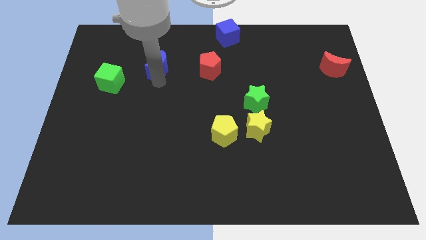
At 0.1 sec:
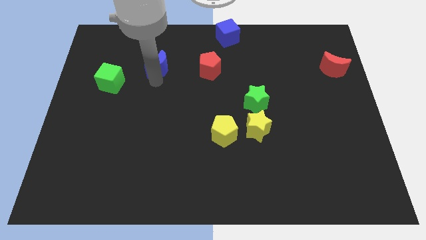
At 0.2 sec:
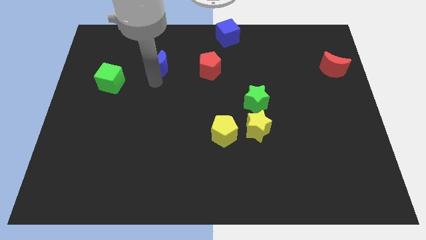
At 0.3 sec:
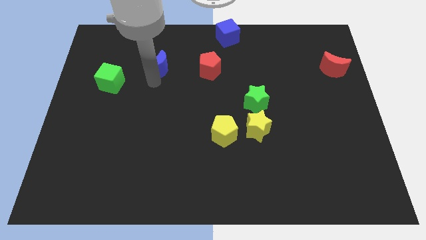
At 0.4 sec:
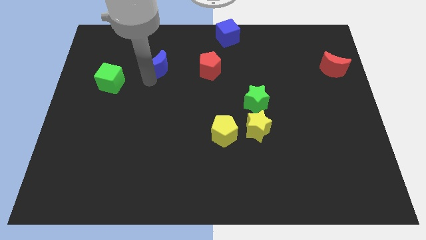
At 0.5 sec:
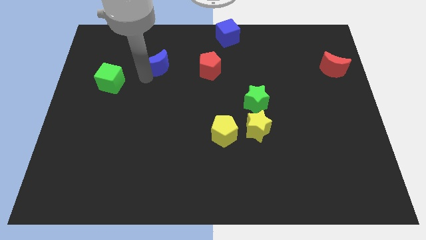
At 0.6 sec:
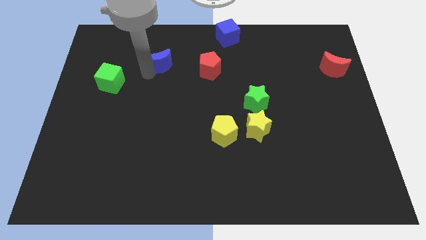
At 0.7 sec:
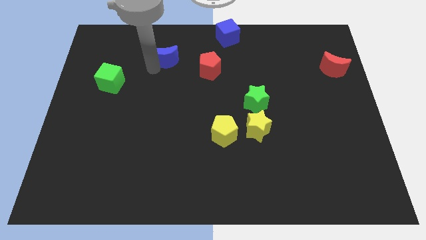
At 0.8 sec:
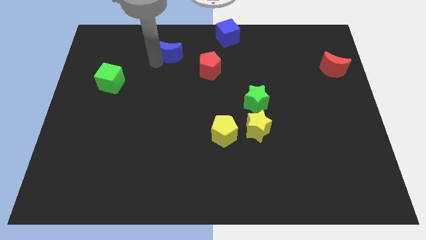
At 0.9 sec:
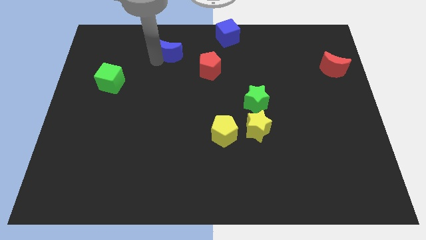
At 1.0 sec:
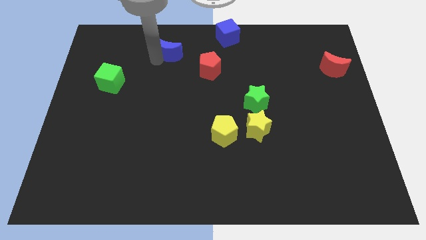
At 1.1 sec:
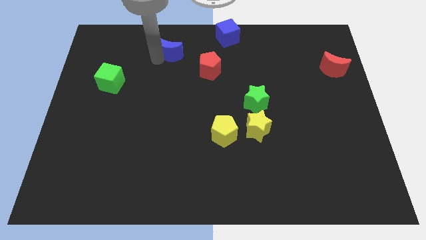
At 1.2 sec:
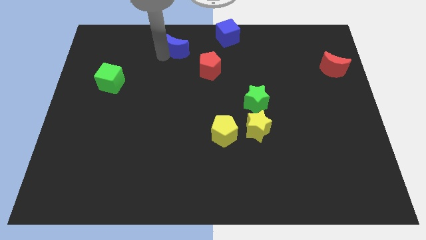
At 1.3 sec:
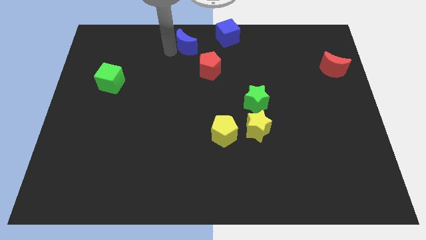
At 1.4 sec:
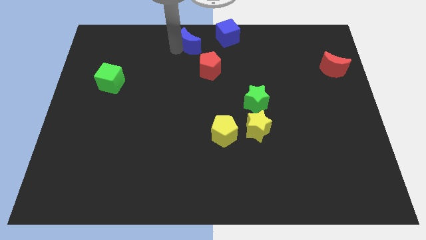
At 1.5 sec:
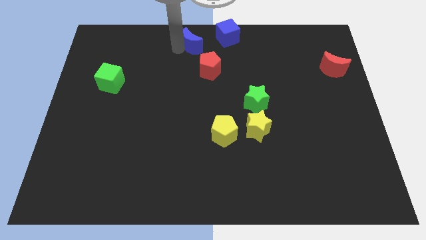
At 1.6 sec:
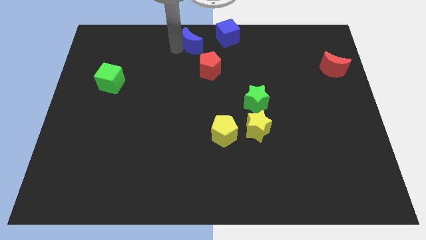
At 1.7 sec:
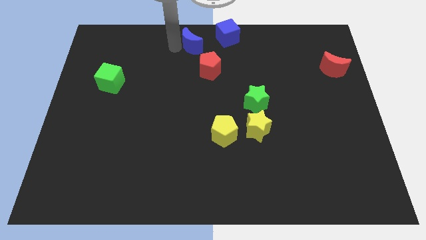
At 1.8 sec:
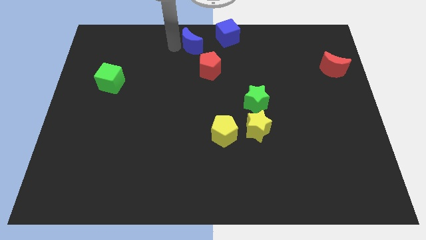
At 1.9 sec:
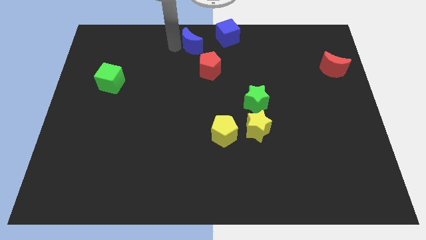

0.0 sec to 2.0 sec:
push the blue moon towards the blue cube

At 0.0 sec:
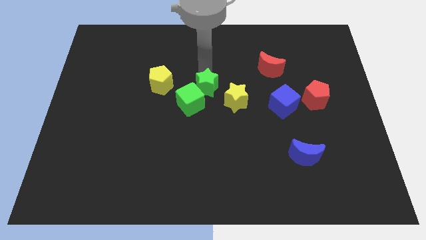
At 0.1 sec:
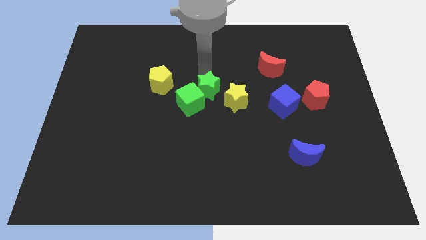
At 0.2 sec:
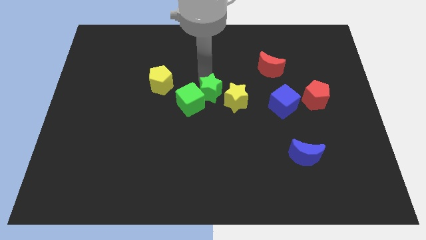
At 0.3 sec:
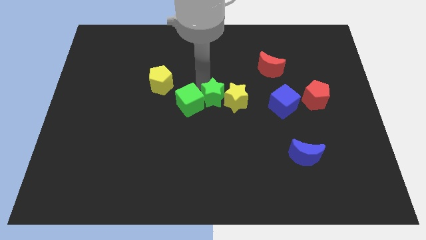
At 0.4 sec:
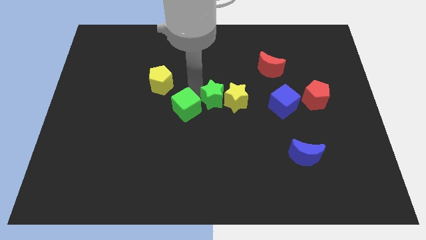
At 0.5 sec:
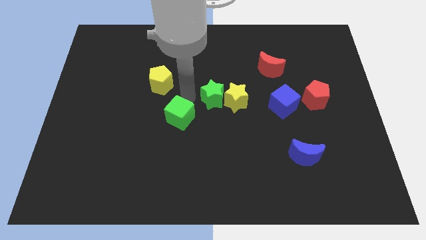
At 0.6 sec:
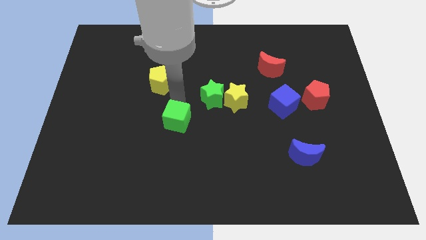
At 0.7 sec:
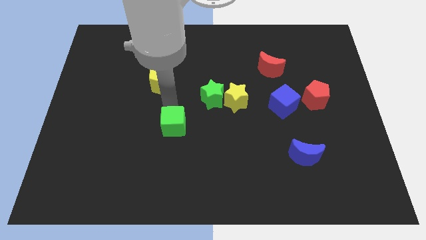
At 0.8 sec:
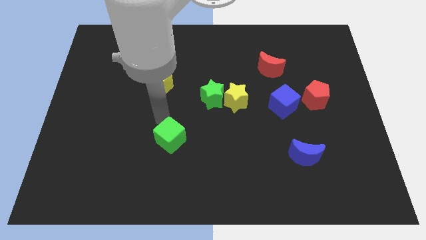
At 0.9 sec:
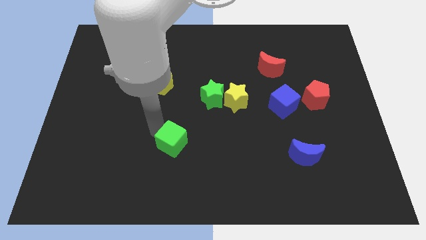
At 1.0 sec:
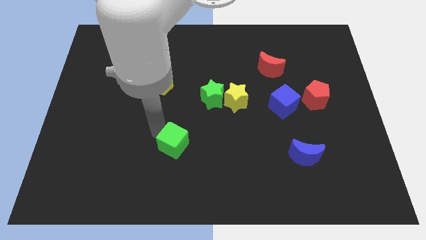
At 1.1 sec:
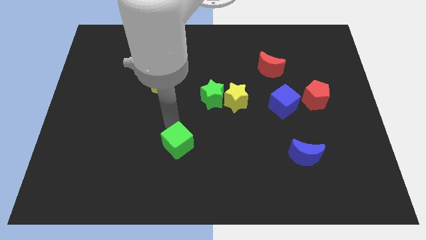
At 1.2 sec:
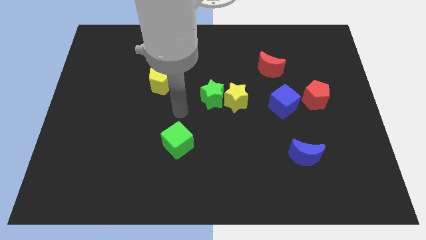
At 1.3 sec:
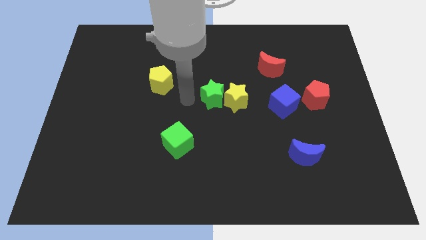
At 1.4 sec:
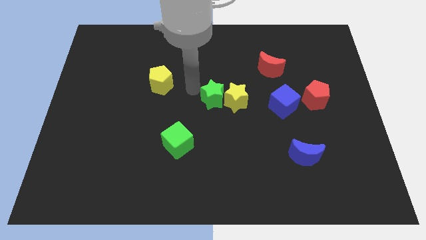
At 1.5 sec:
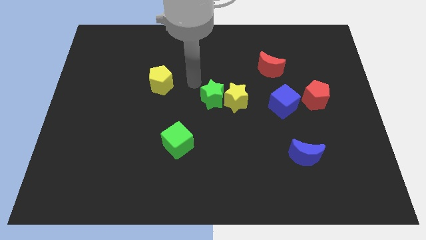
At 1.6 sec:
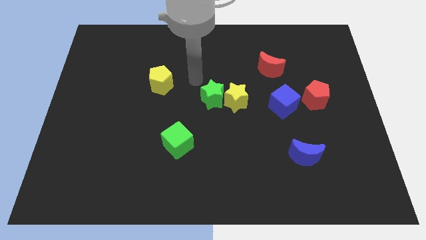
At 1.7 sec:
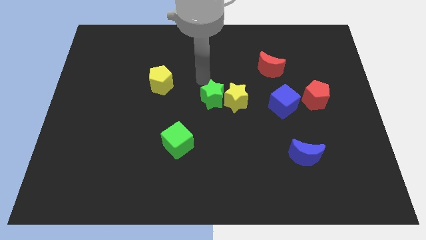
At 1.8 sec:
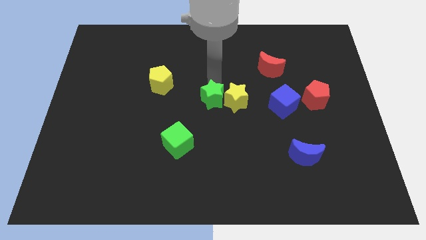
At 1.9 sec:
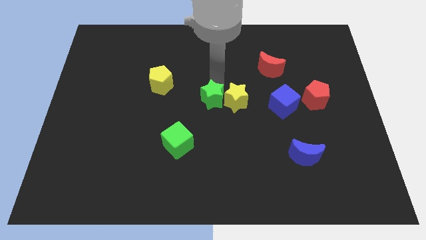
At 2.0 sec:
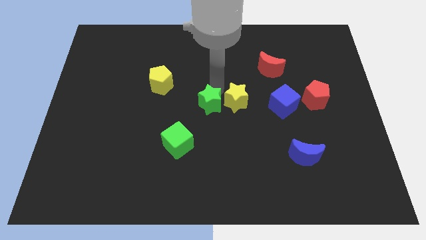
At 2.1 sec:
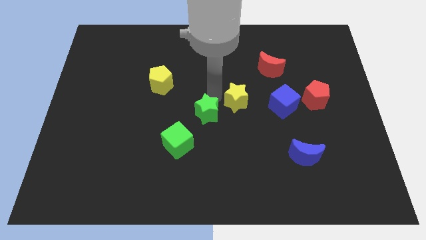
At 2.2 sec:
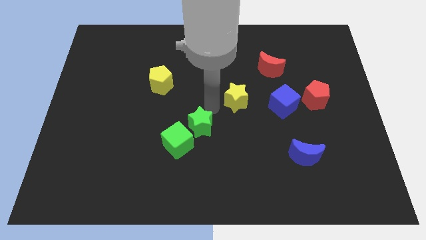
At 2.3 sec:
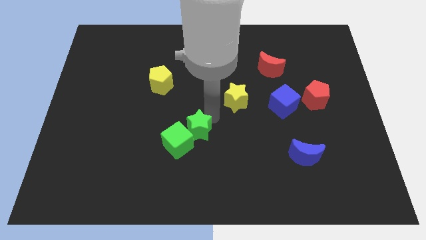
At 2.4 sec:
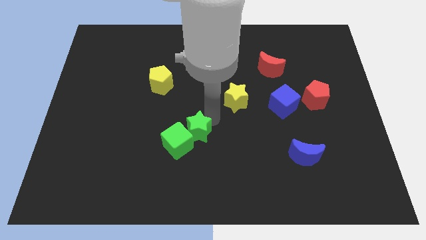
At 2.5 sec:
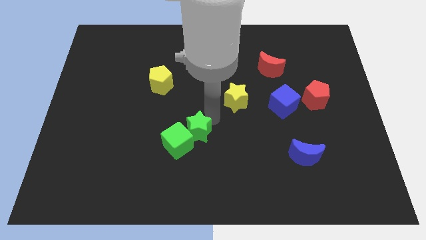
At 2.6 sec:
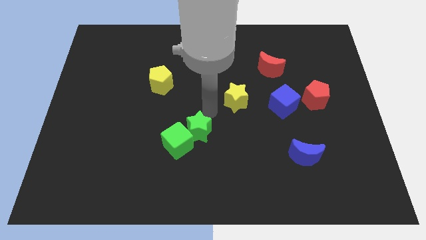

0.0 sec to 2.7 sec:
drag the green star slightly downwards

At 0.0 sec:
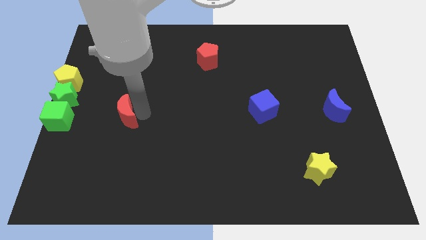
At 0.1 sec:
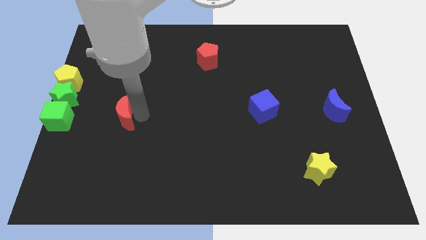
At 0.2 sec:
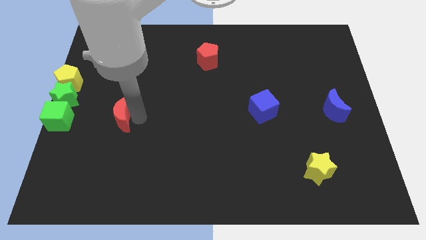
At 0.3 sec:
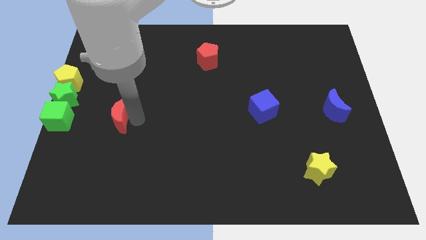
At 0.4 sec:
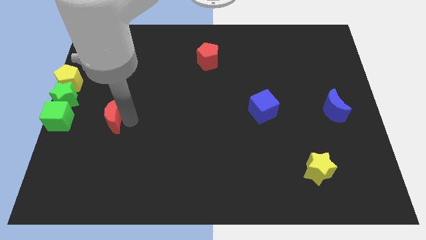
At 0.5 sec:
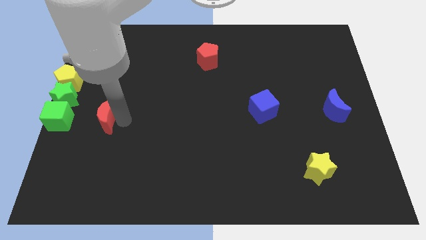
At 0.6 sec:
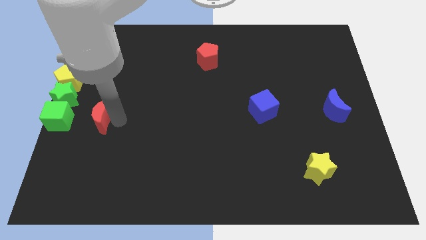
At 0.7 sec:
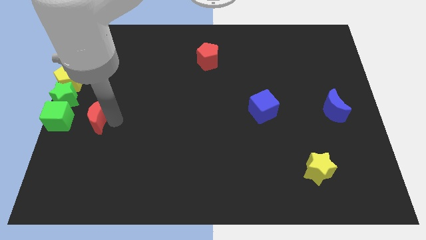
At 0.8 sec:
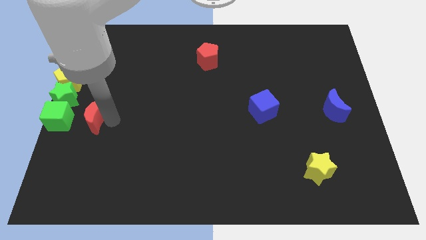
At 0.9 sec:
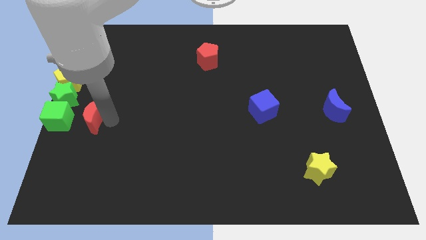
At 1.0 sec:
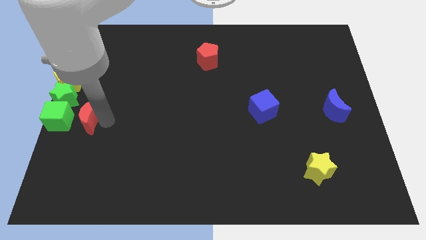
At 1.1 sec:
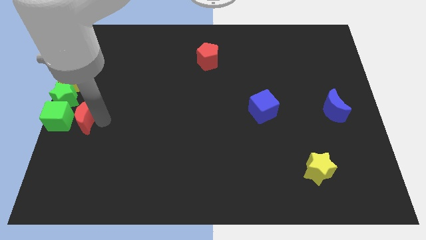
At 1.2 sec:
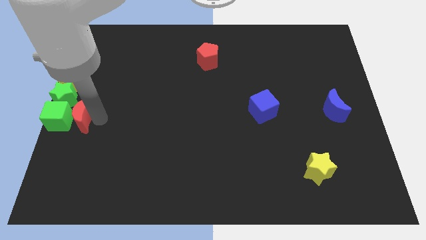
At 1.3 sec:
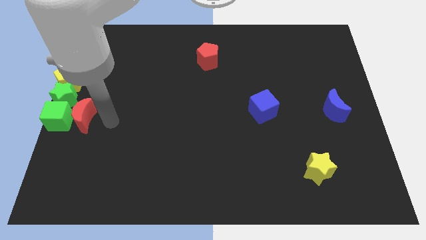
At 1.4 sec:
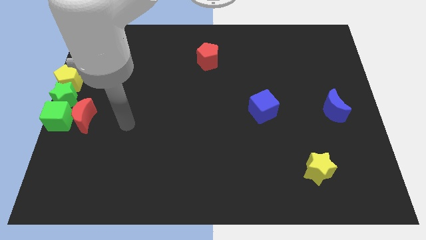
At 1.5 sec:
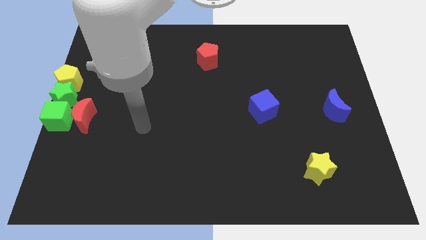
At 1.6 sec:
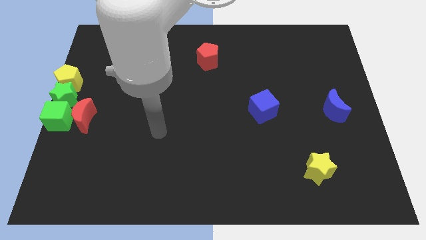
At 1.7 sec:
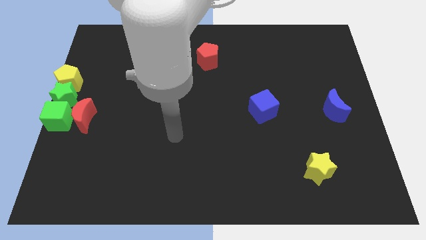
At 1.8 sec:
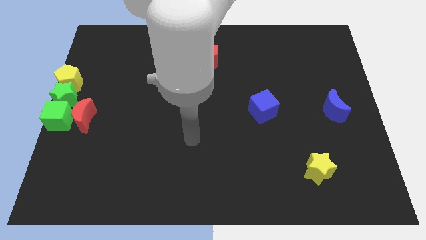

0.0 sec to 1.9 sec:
place red crescent to the right of green cube and green star

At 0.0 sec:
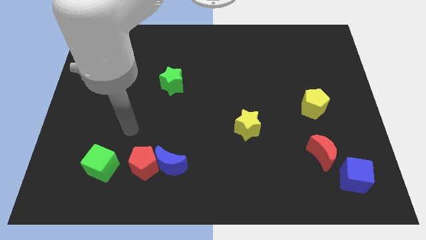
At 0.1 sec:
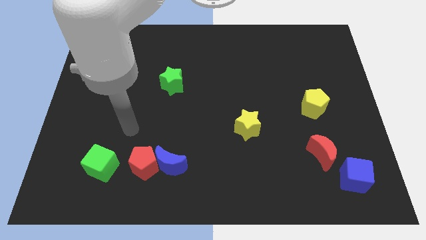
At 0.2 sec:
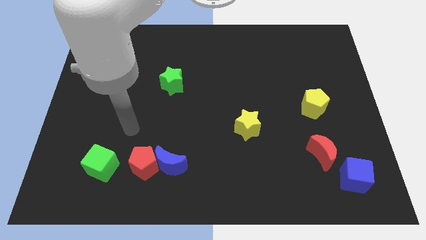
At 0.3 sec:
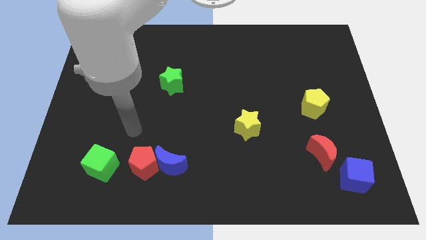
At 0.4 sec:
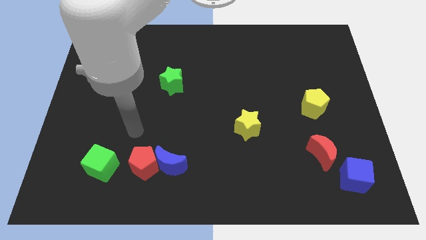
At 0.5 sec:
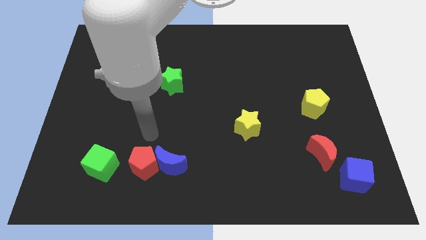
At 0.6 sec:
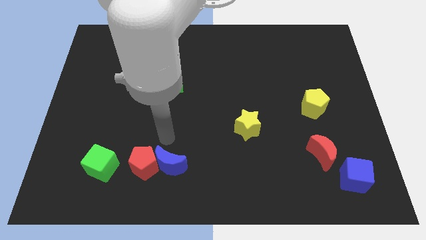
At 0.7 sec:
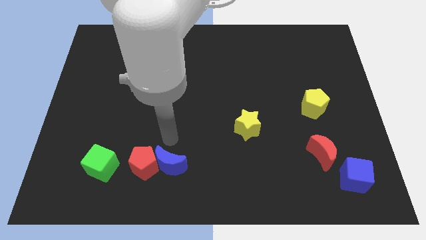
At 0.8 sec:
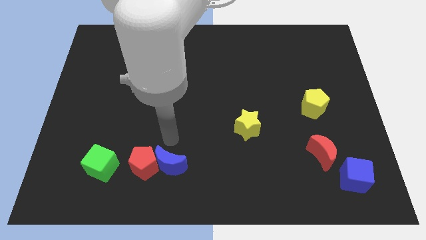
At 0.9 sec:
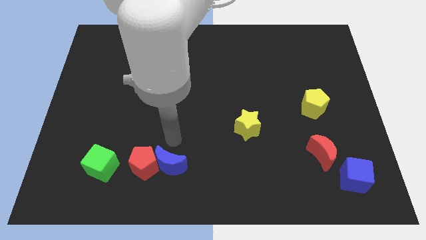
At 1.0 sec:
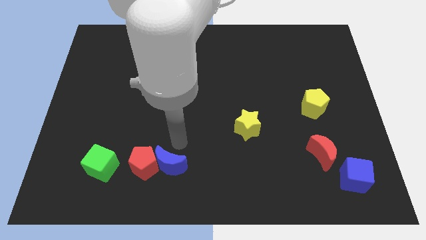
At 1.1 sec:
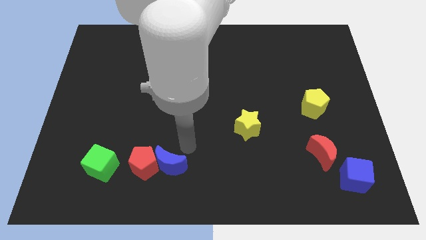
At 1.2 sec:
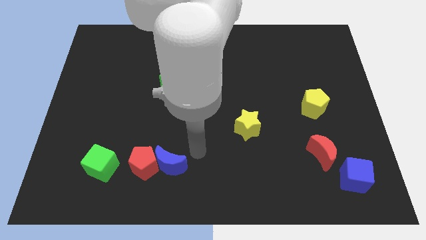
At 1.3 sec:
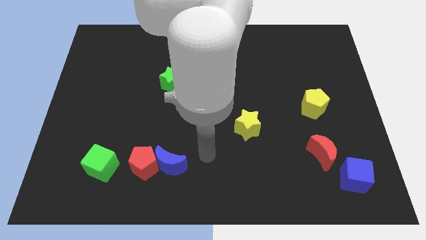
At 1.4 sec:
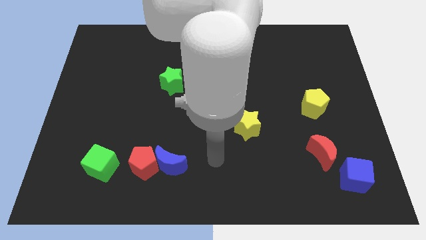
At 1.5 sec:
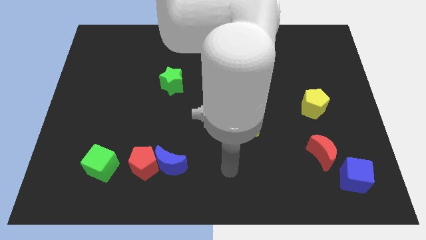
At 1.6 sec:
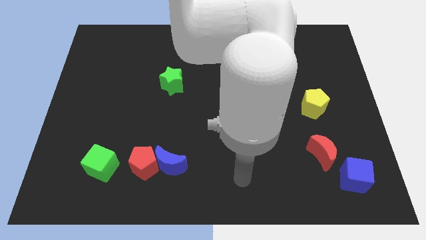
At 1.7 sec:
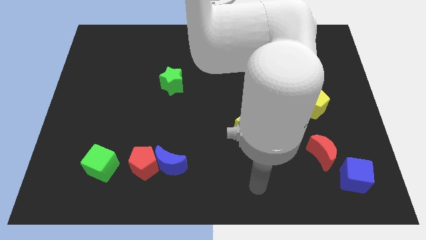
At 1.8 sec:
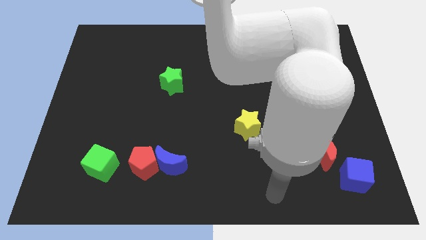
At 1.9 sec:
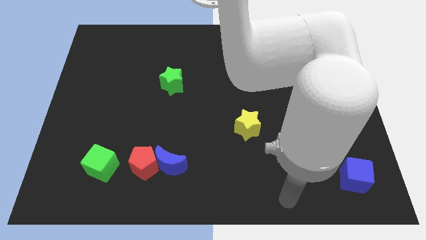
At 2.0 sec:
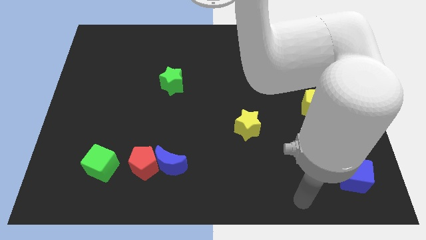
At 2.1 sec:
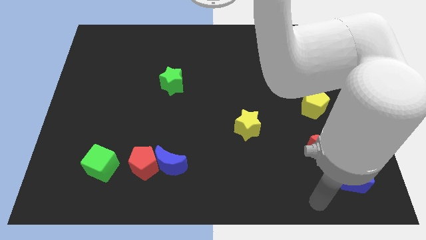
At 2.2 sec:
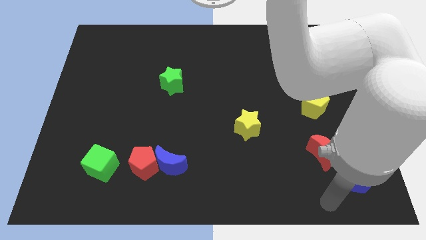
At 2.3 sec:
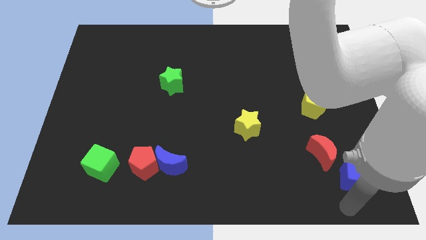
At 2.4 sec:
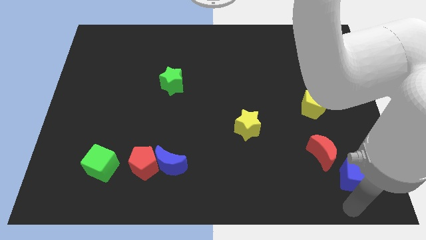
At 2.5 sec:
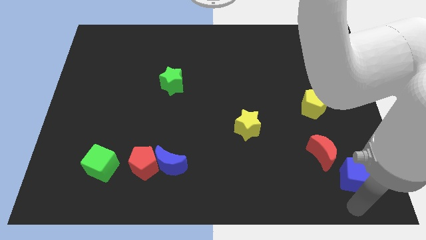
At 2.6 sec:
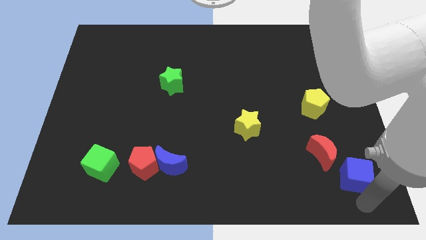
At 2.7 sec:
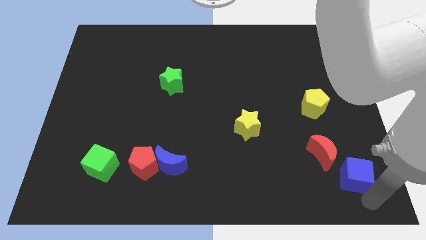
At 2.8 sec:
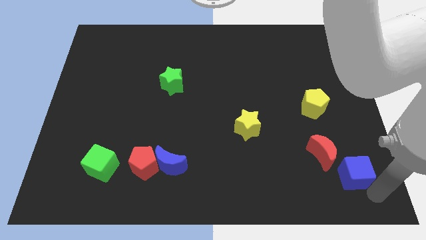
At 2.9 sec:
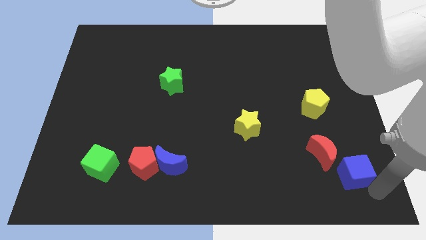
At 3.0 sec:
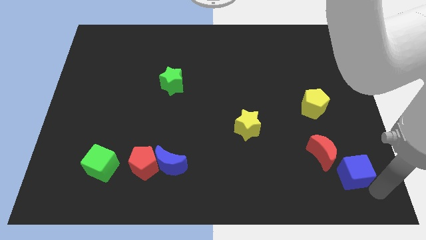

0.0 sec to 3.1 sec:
touch the blue cube at the bottom
